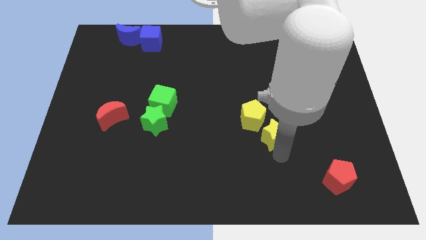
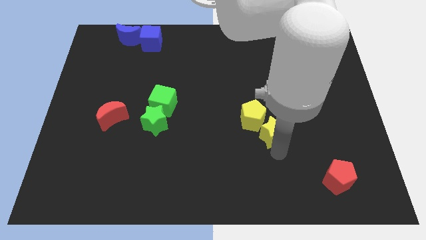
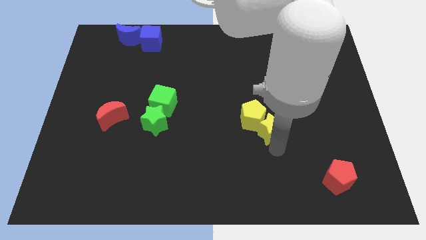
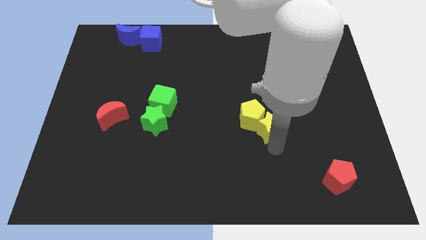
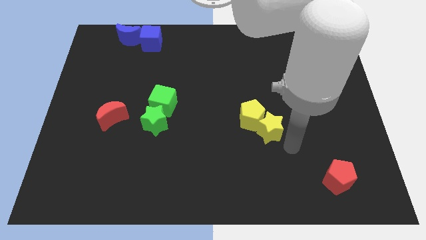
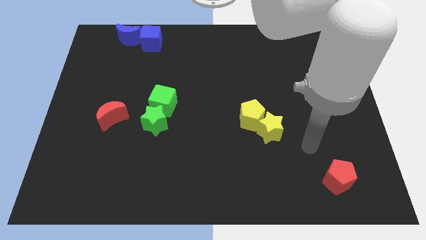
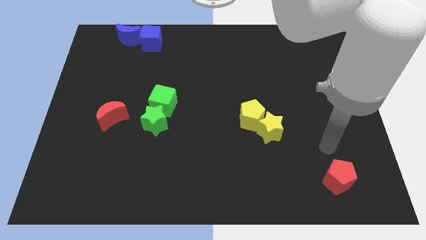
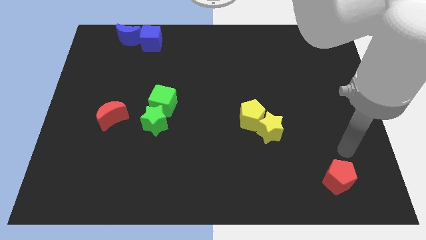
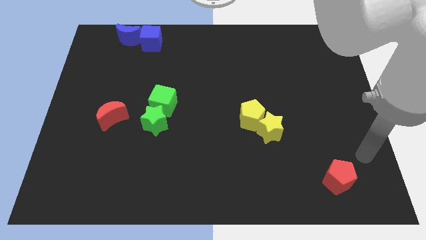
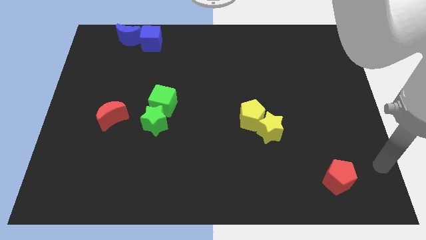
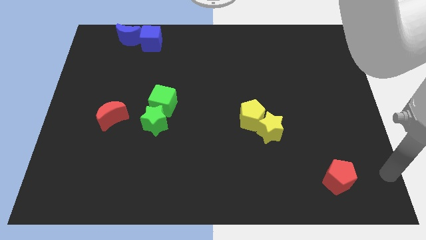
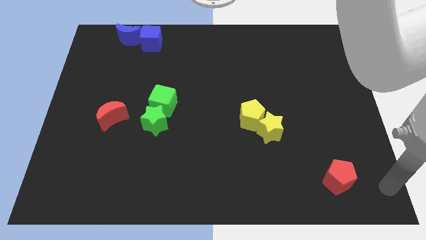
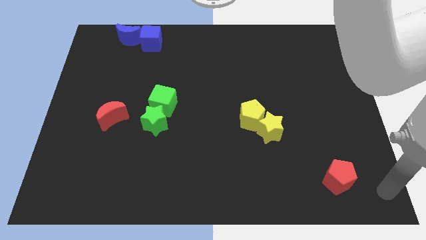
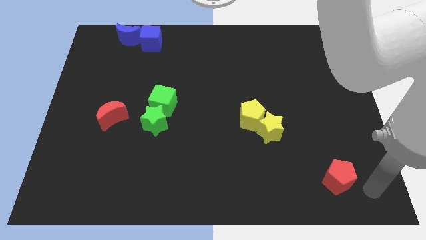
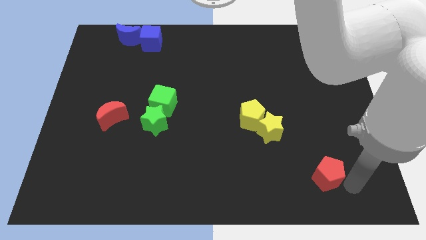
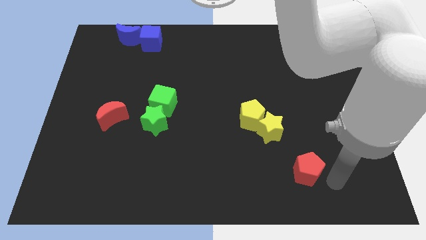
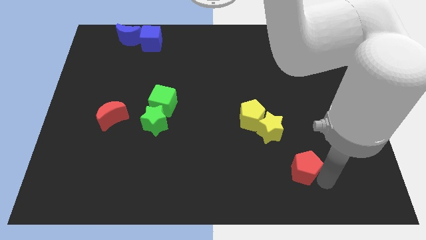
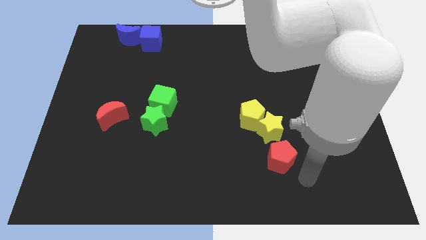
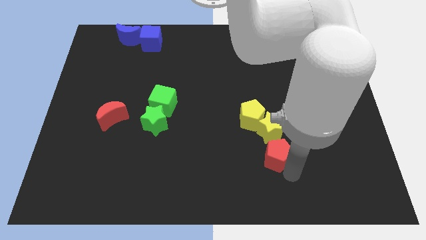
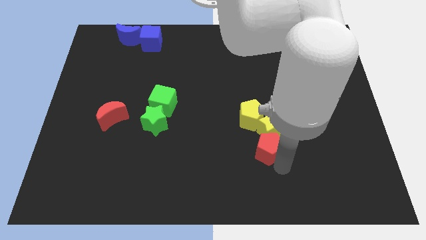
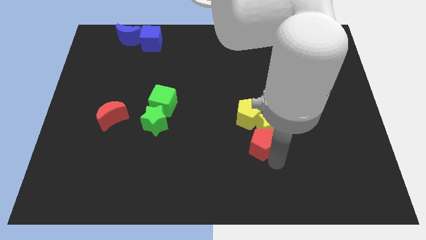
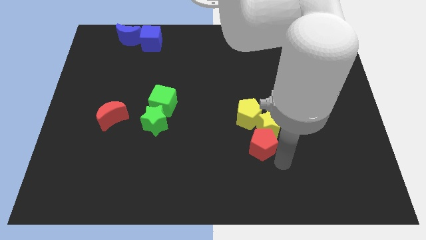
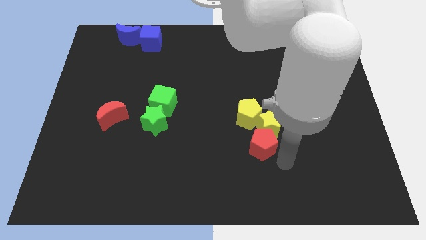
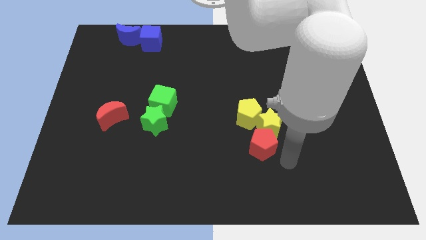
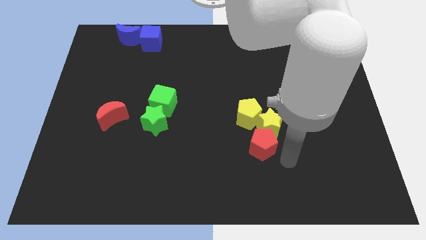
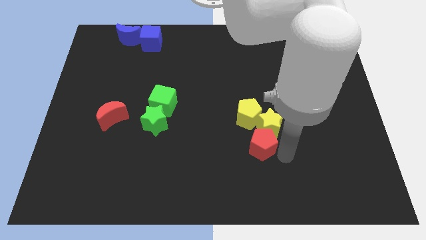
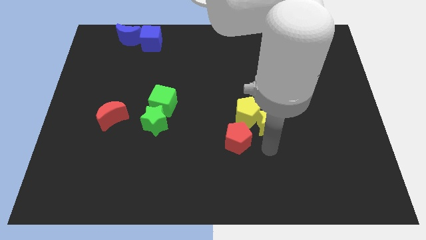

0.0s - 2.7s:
place the red pentagon down to the yellow pentagon

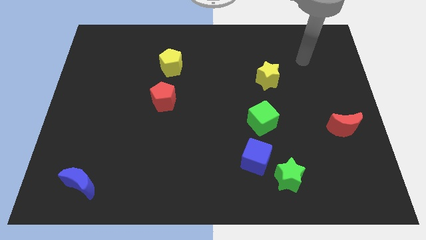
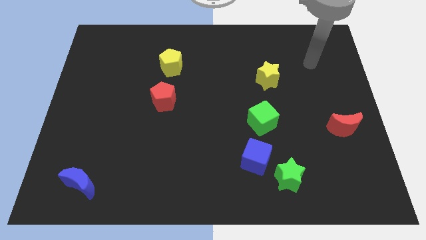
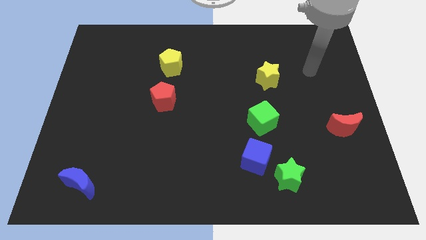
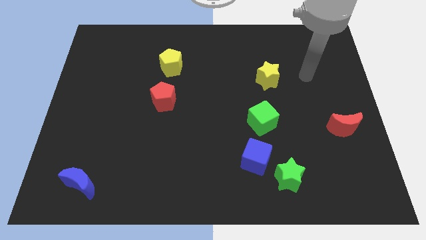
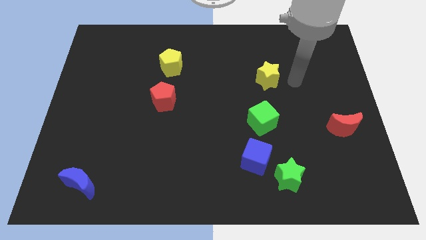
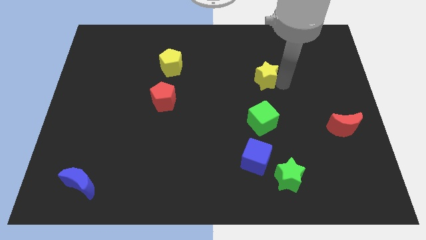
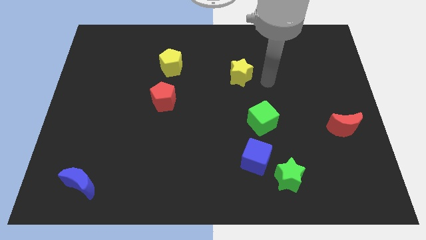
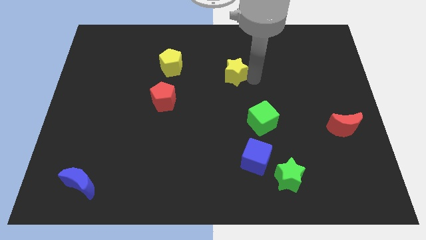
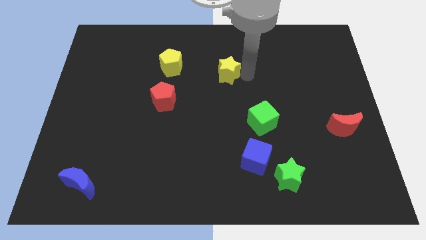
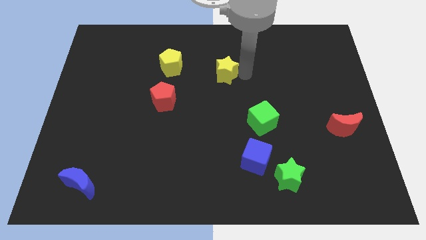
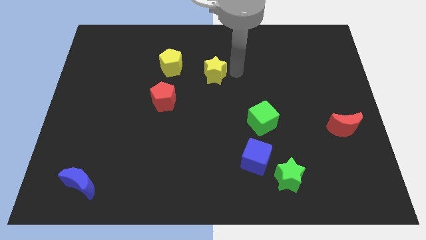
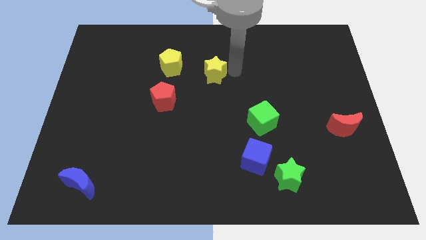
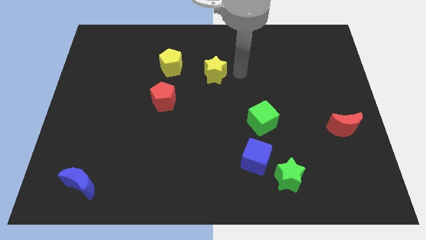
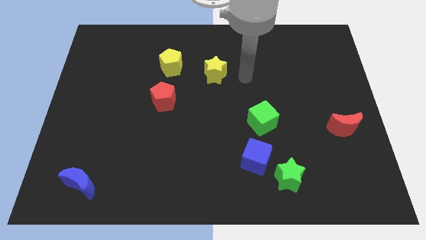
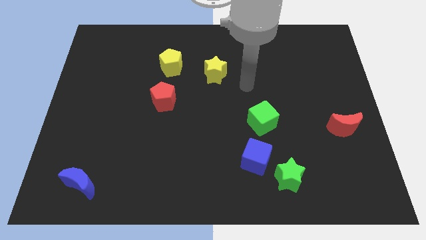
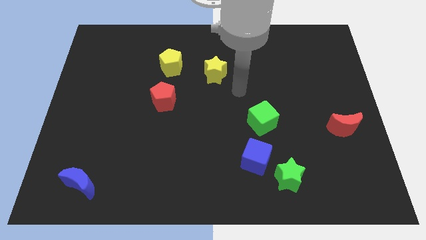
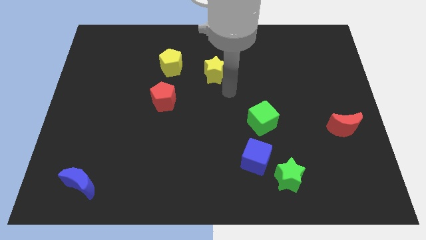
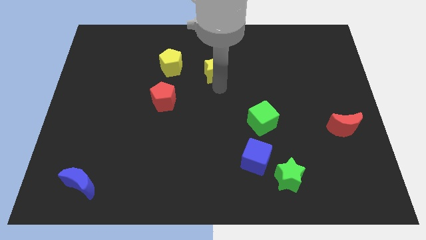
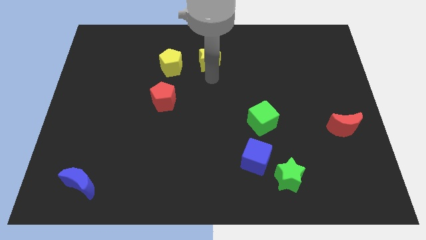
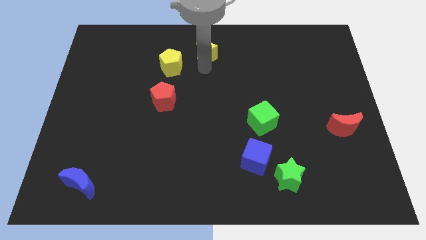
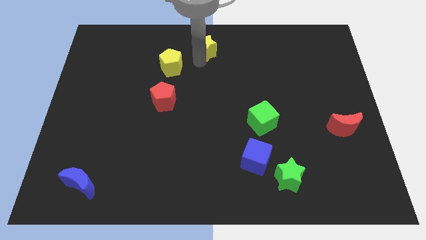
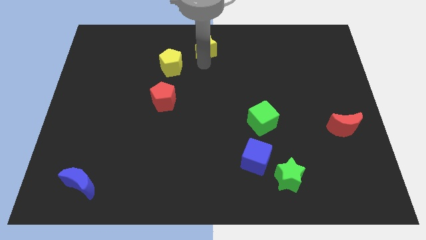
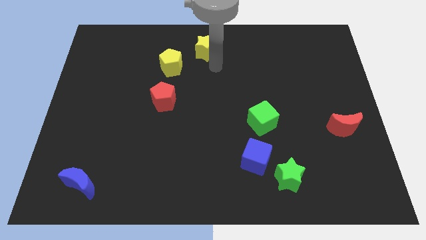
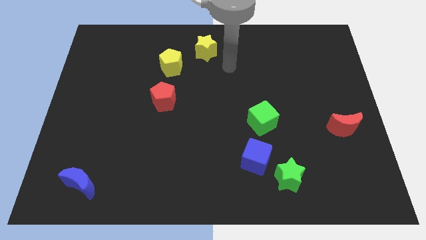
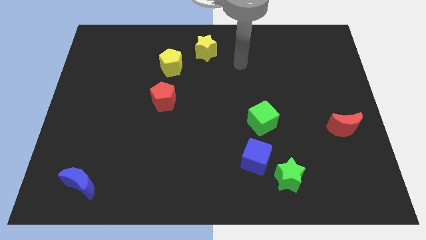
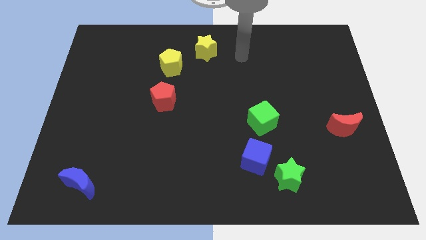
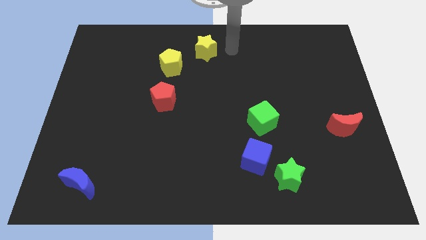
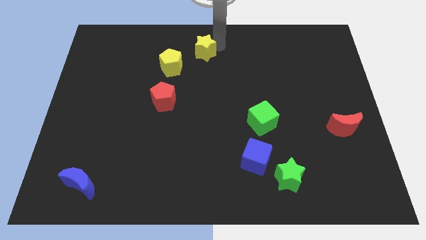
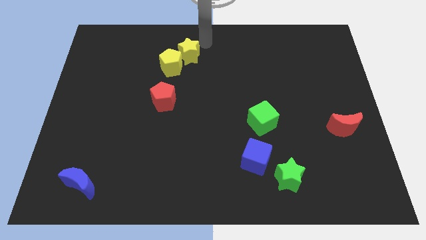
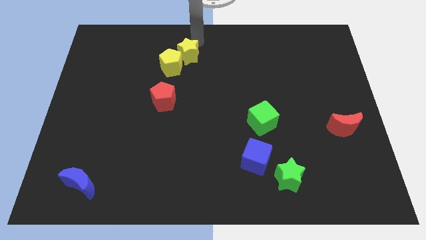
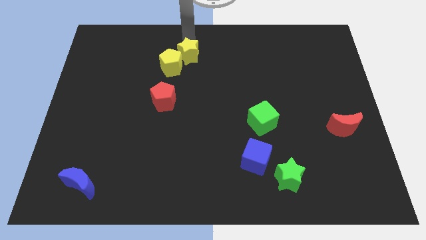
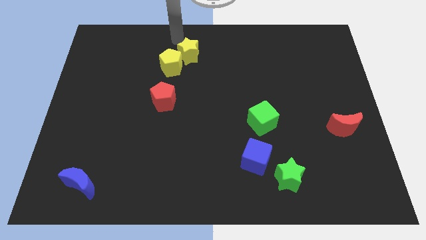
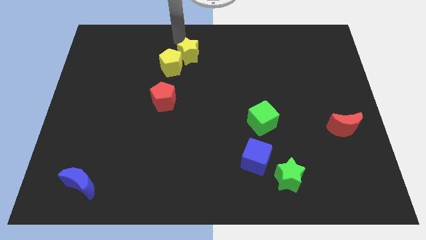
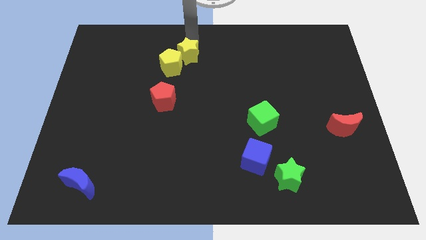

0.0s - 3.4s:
push the yellow star close to the yellow pentagon

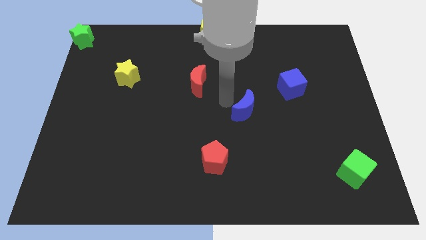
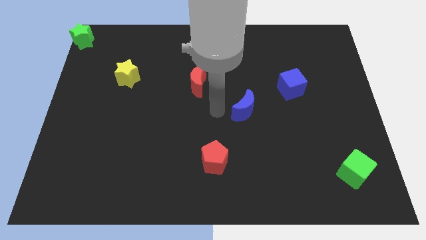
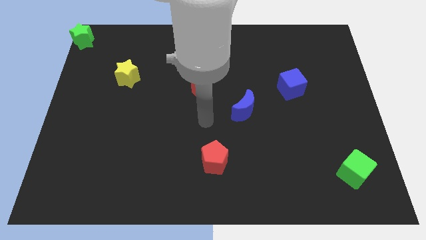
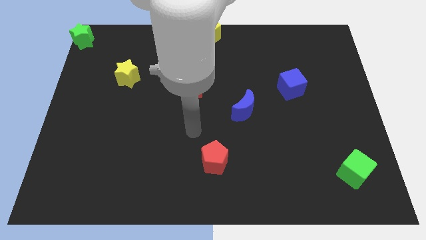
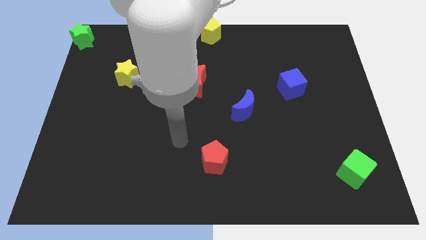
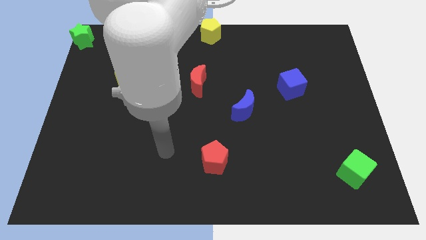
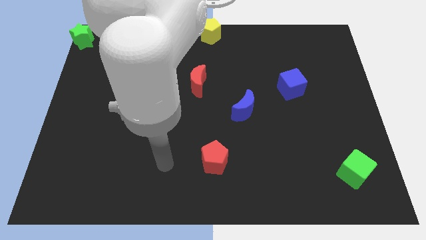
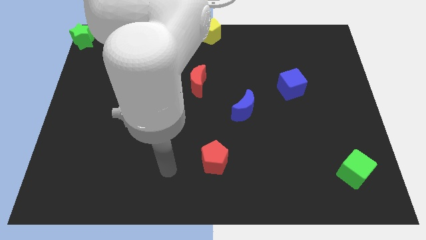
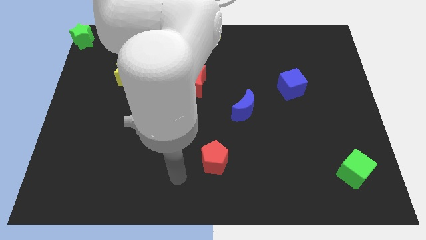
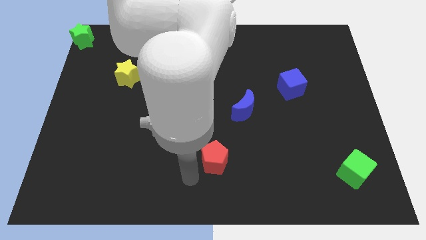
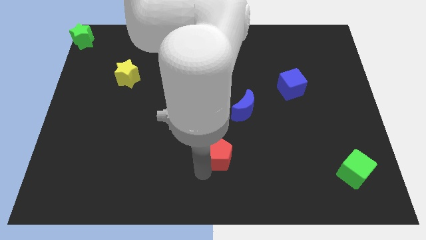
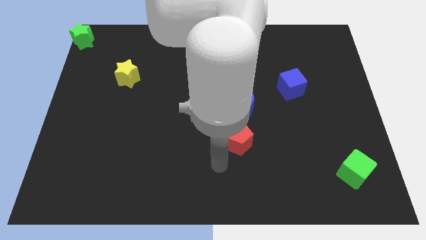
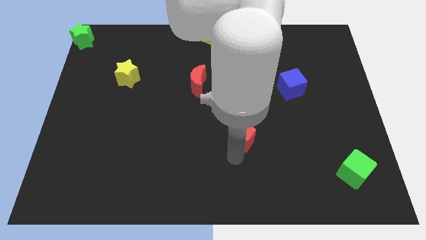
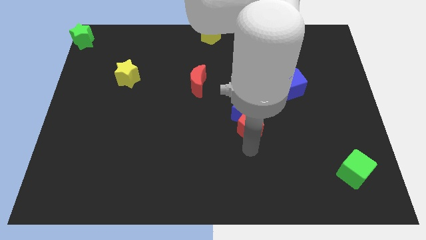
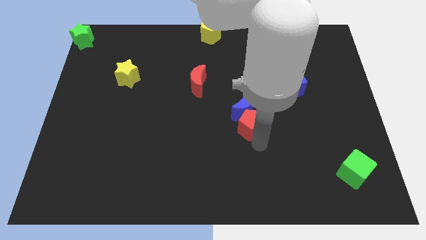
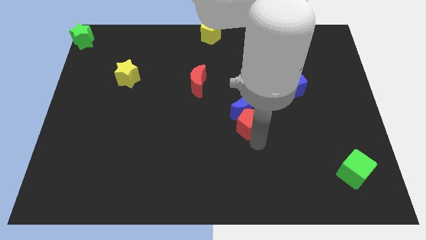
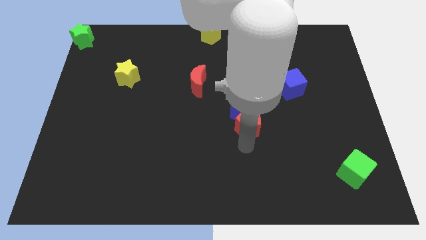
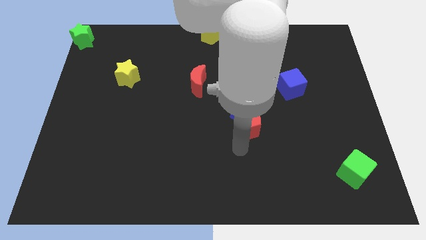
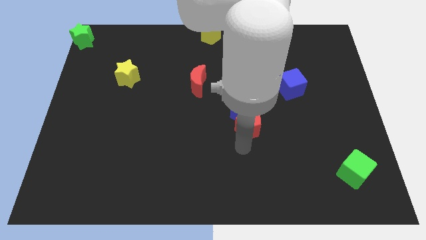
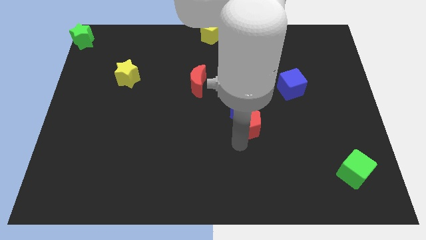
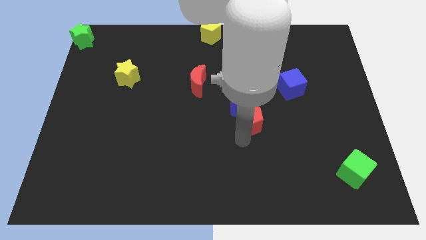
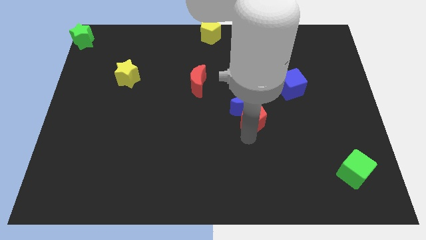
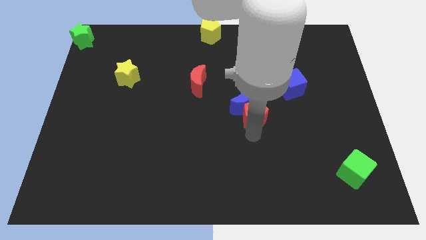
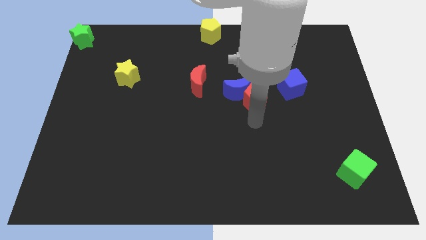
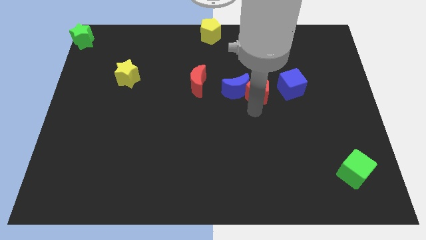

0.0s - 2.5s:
push the red pentagon into the blue moon

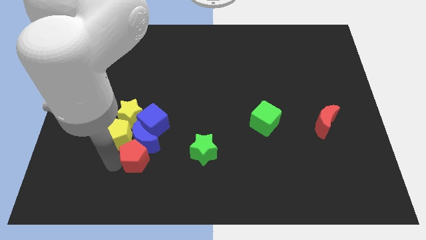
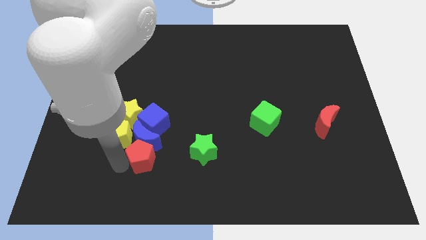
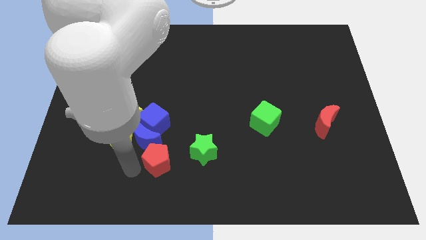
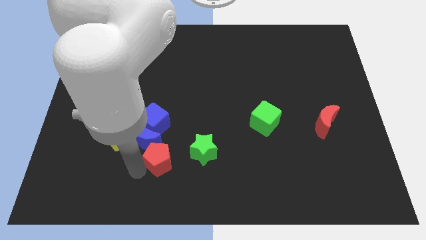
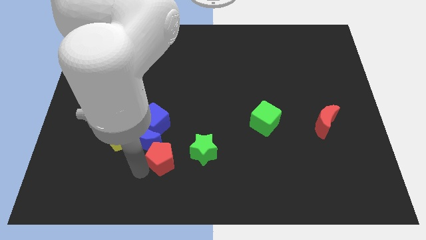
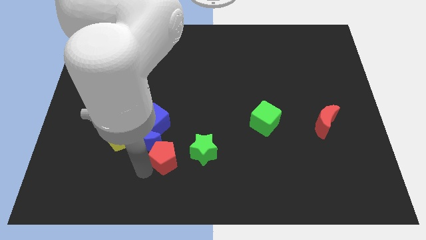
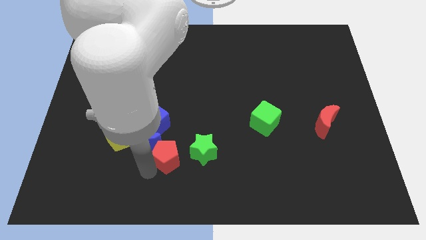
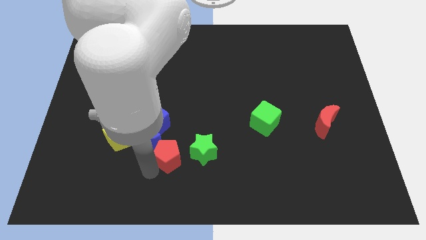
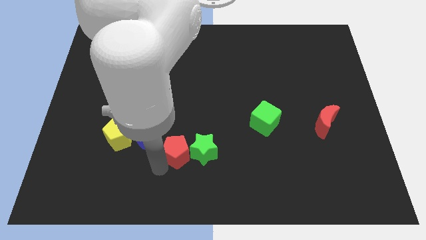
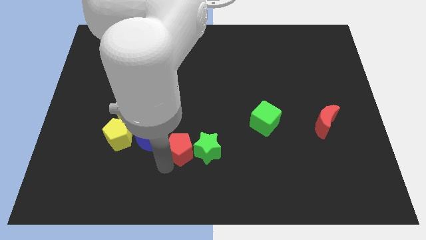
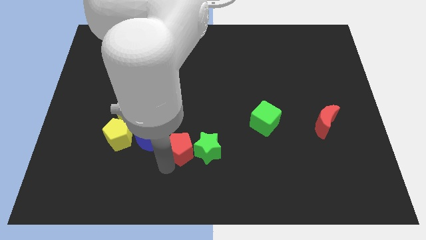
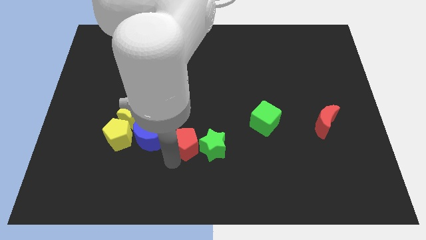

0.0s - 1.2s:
place the red pentagon to the left of the green star
